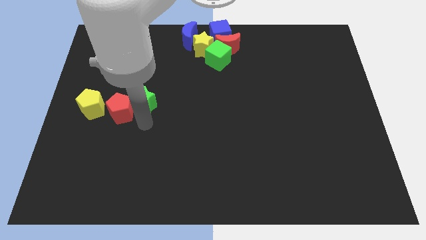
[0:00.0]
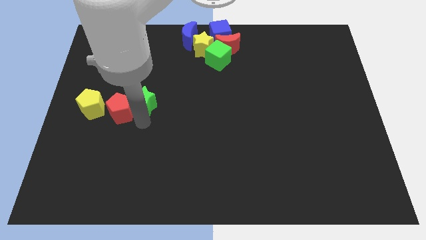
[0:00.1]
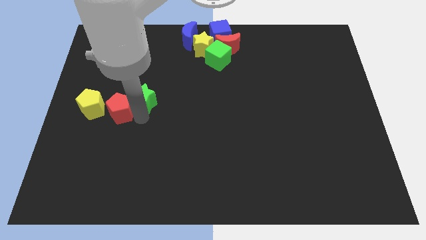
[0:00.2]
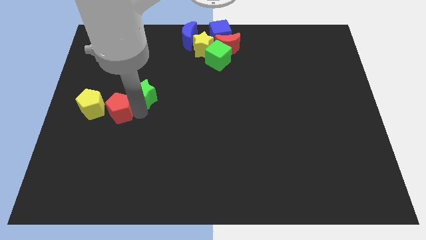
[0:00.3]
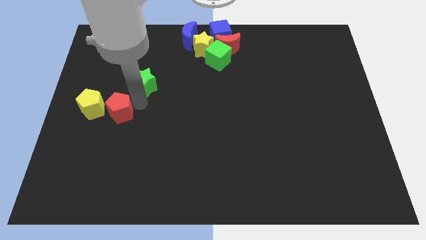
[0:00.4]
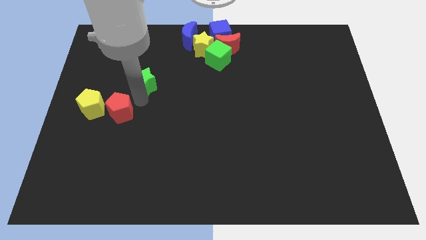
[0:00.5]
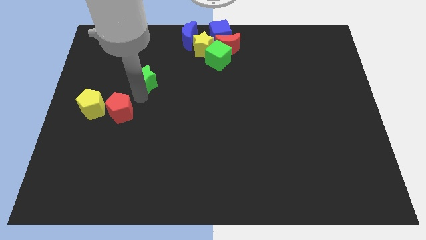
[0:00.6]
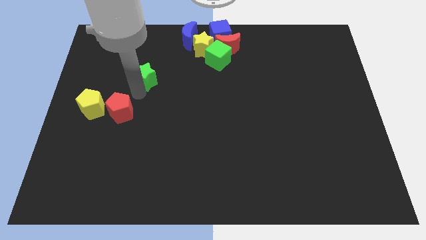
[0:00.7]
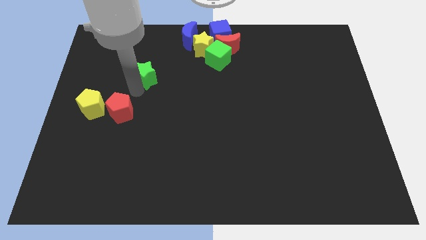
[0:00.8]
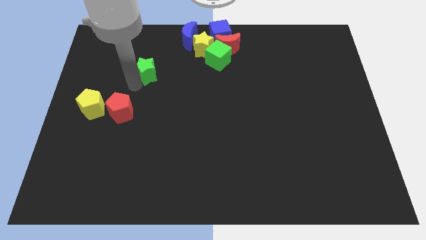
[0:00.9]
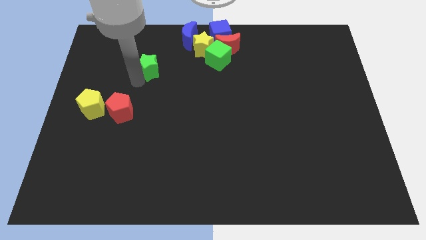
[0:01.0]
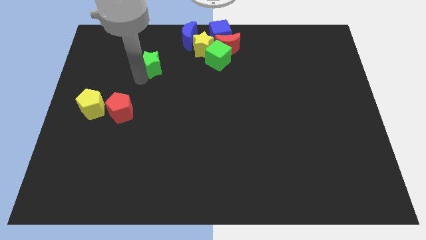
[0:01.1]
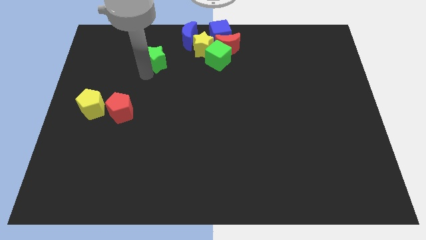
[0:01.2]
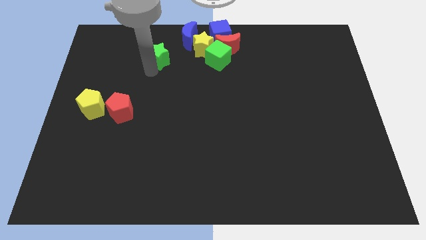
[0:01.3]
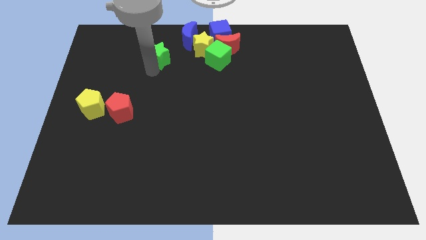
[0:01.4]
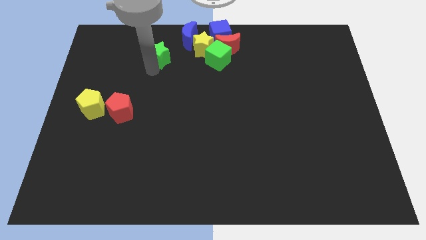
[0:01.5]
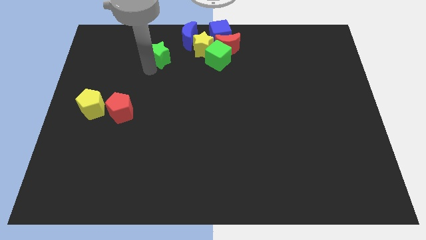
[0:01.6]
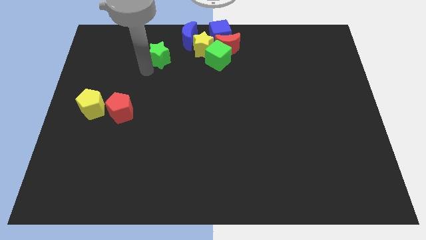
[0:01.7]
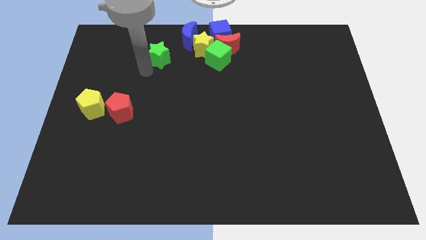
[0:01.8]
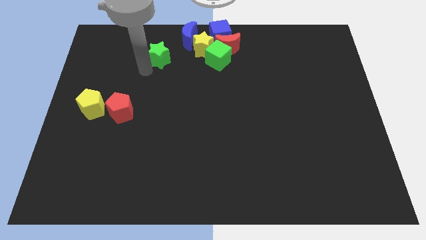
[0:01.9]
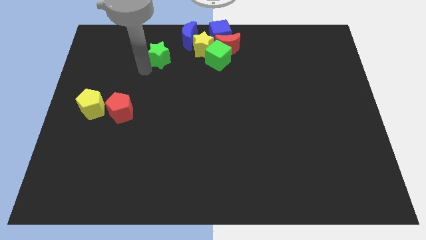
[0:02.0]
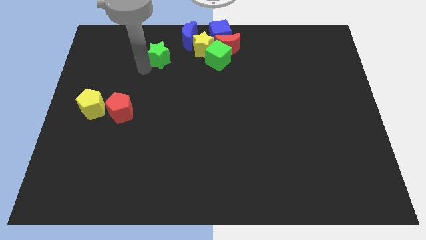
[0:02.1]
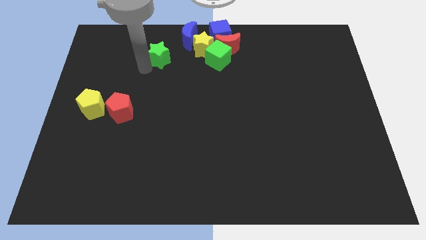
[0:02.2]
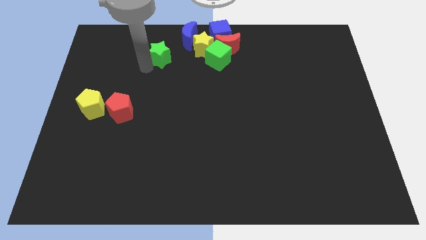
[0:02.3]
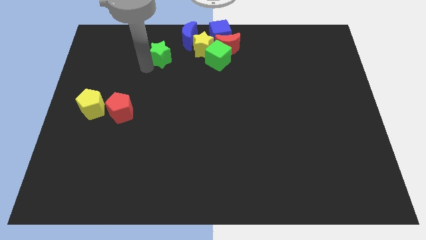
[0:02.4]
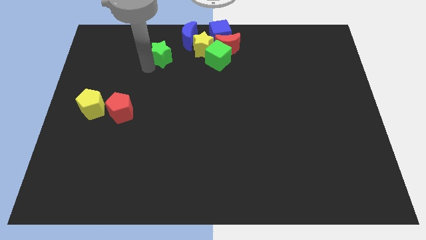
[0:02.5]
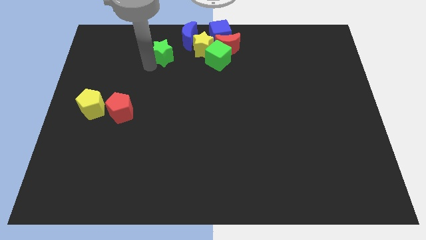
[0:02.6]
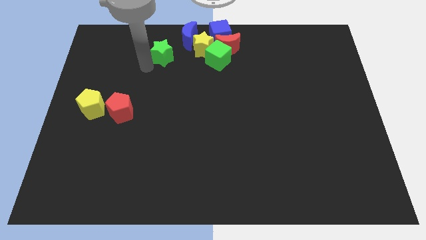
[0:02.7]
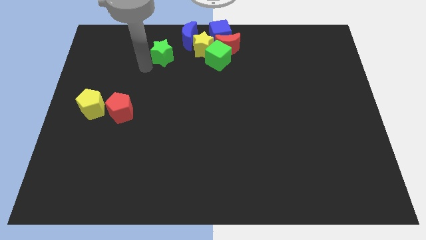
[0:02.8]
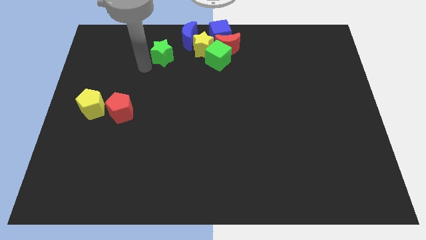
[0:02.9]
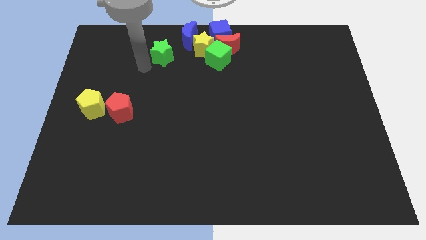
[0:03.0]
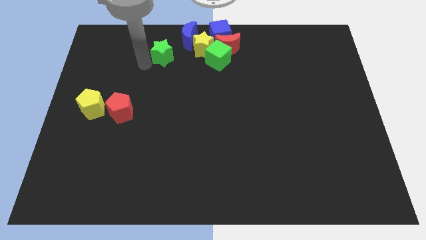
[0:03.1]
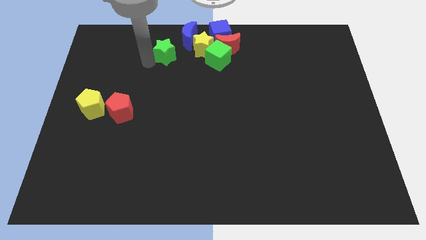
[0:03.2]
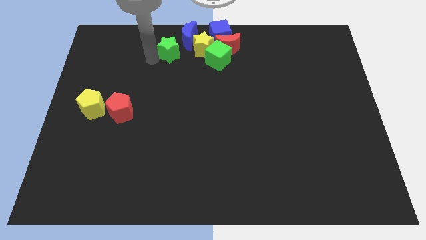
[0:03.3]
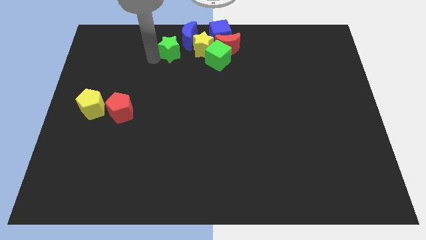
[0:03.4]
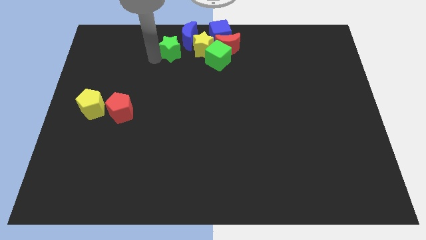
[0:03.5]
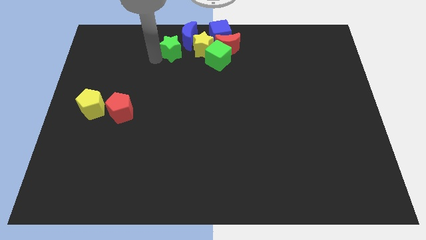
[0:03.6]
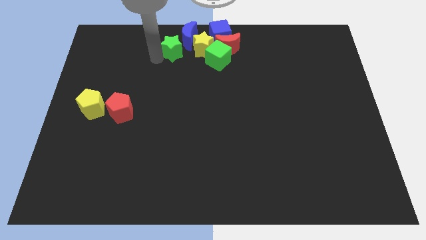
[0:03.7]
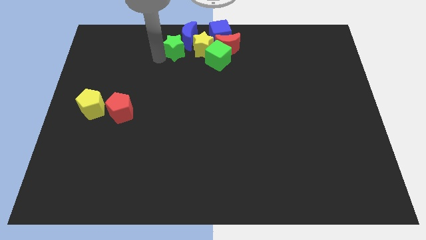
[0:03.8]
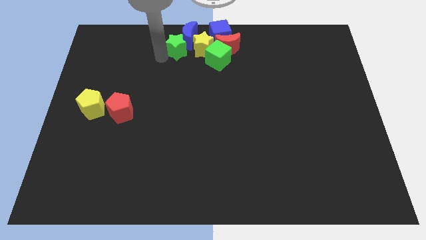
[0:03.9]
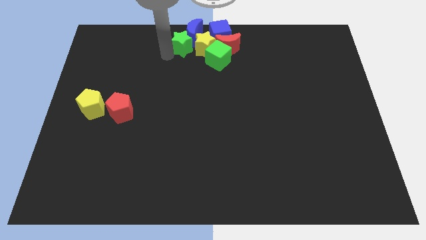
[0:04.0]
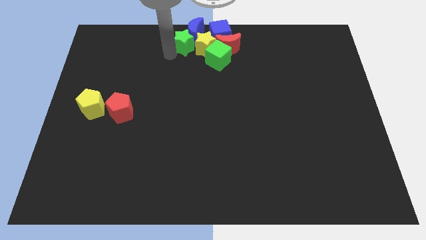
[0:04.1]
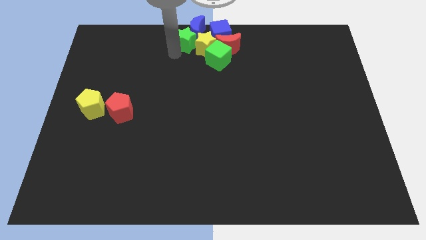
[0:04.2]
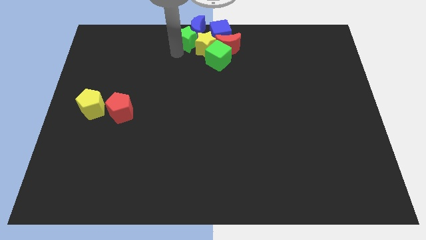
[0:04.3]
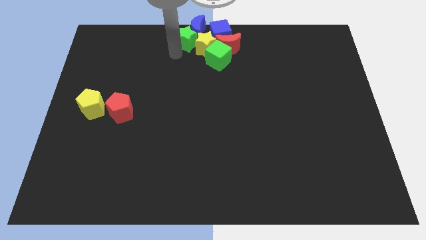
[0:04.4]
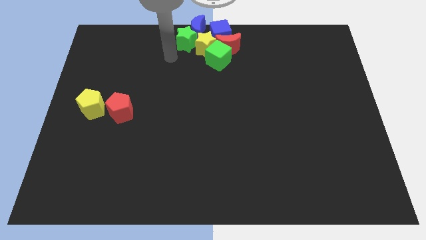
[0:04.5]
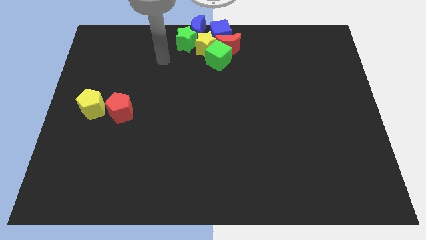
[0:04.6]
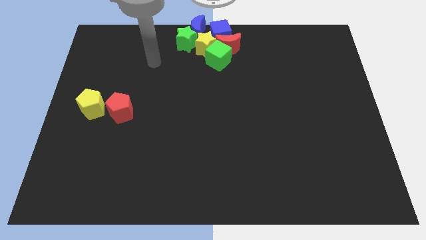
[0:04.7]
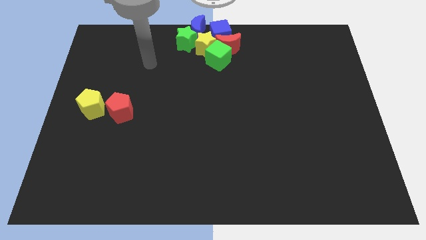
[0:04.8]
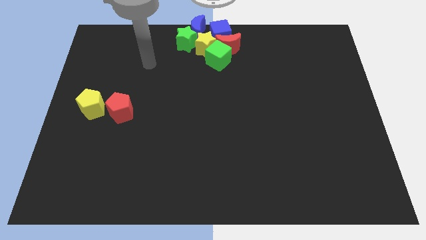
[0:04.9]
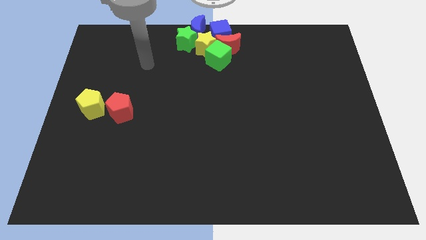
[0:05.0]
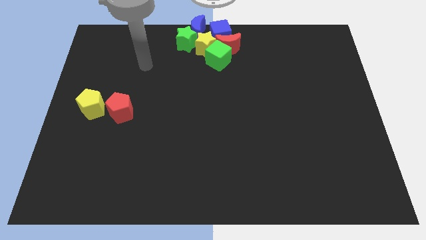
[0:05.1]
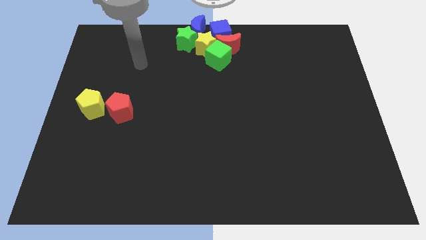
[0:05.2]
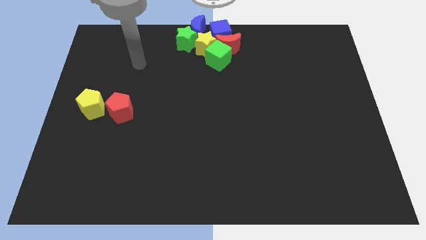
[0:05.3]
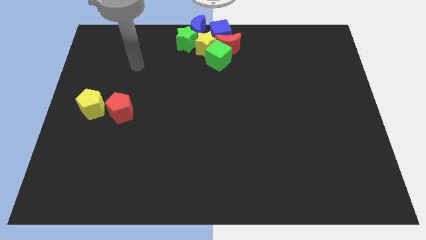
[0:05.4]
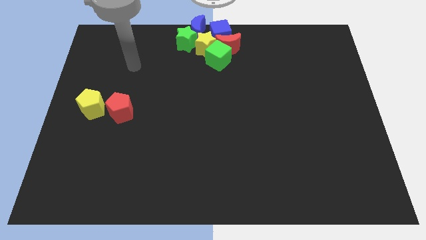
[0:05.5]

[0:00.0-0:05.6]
move green star to the left of yellow star

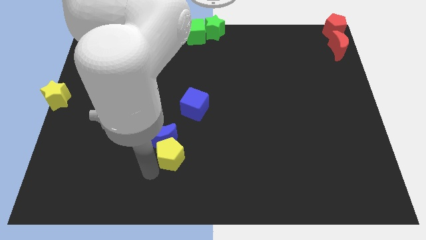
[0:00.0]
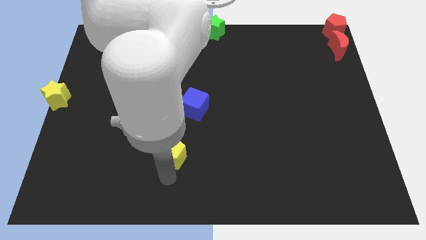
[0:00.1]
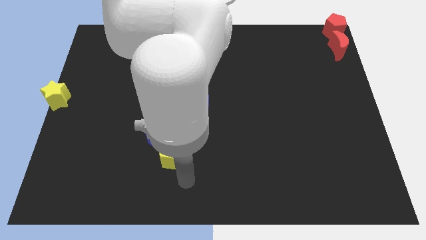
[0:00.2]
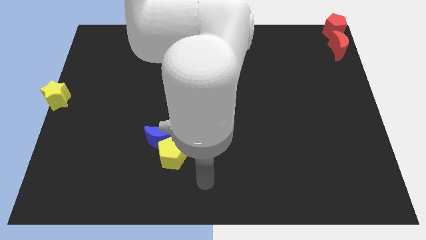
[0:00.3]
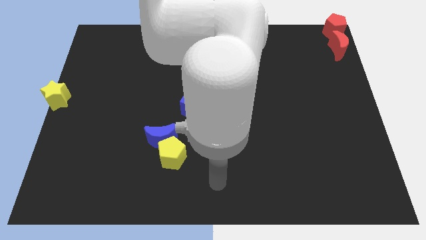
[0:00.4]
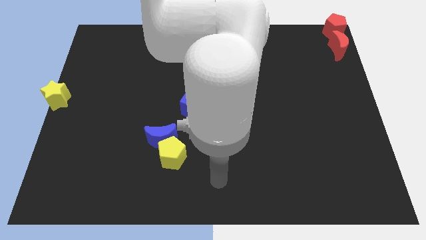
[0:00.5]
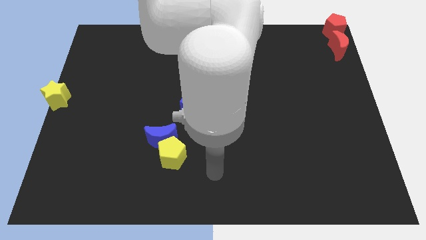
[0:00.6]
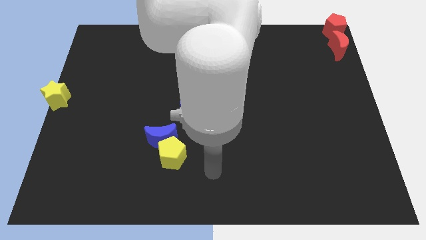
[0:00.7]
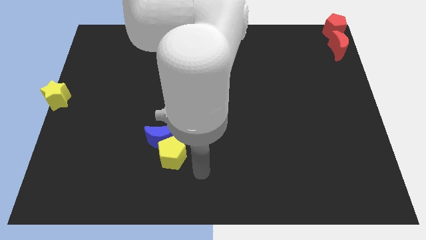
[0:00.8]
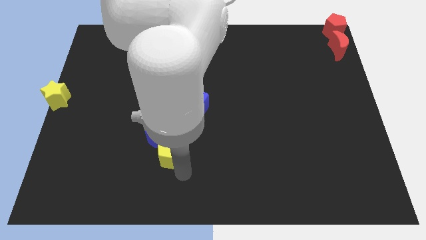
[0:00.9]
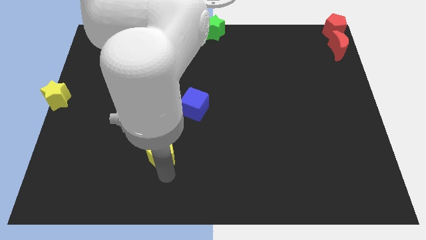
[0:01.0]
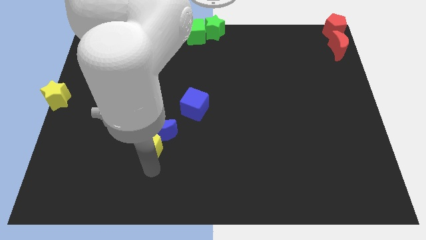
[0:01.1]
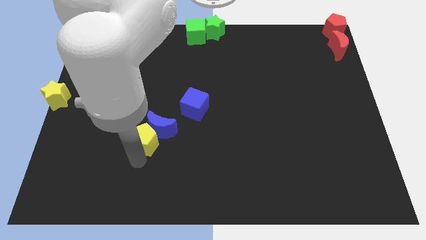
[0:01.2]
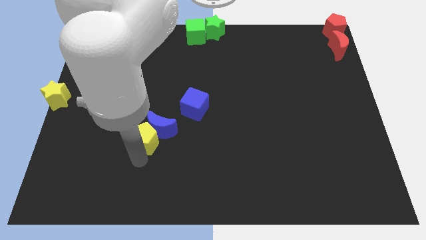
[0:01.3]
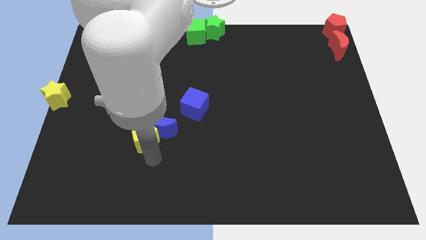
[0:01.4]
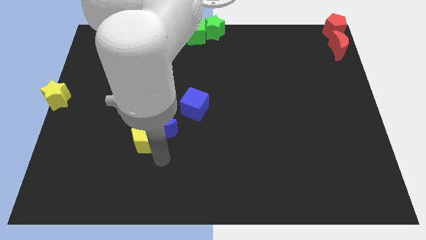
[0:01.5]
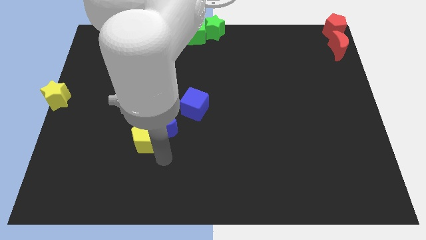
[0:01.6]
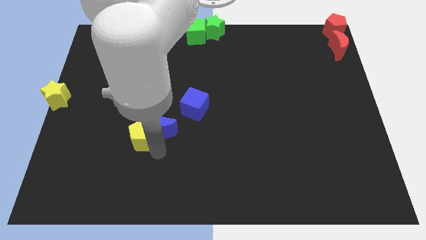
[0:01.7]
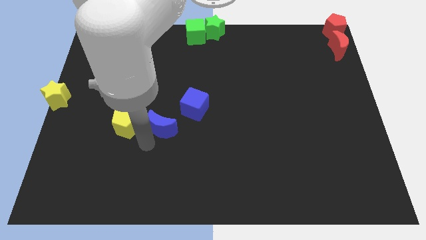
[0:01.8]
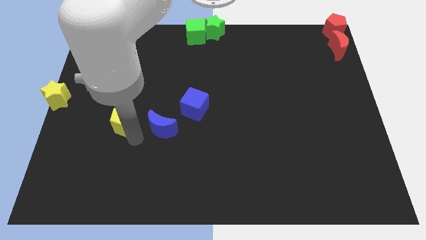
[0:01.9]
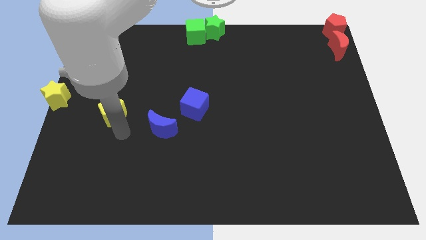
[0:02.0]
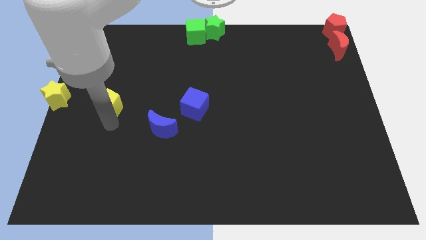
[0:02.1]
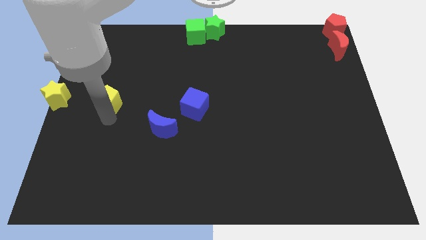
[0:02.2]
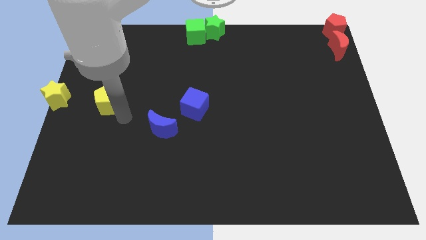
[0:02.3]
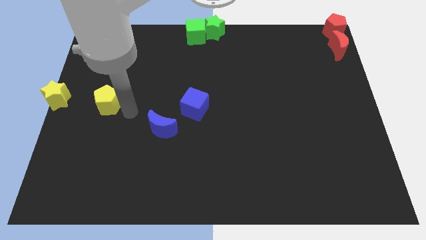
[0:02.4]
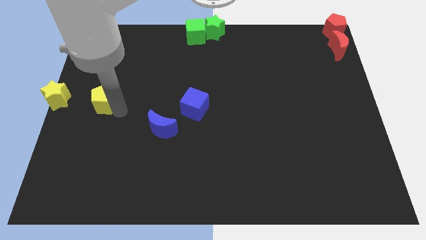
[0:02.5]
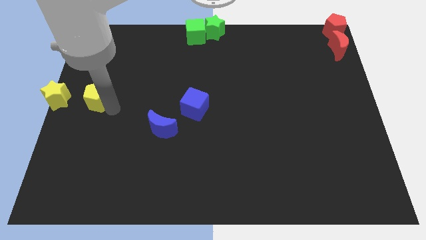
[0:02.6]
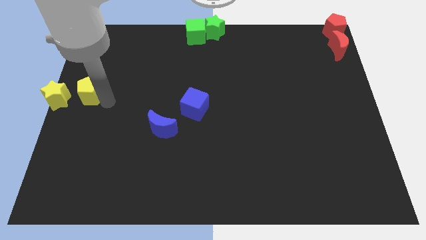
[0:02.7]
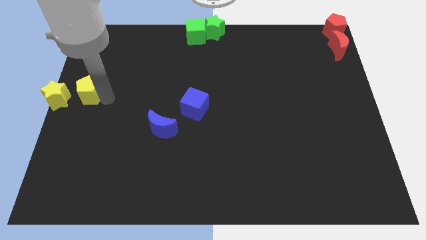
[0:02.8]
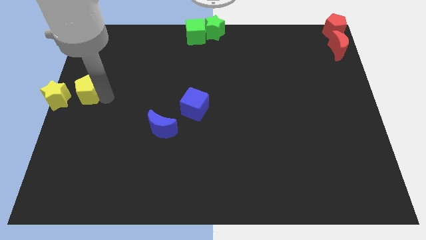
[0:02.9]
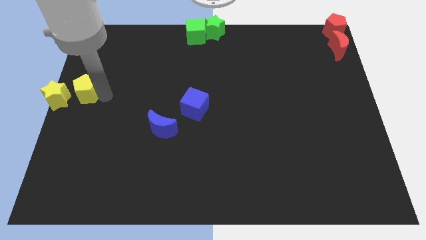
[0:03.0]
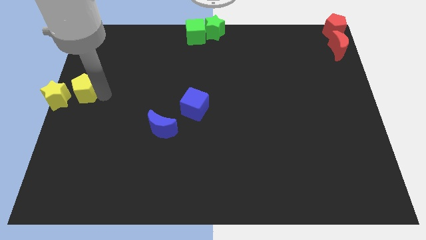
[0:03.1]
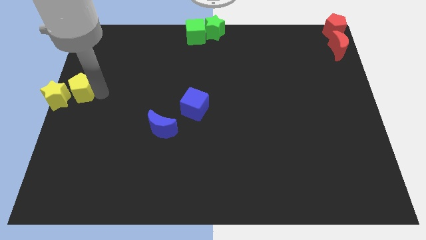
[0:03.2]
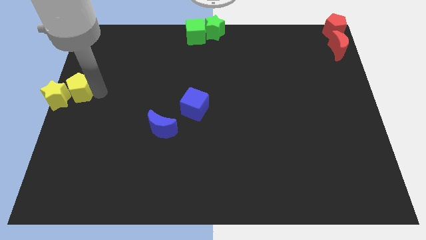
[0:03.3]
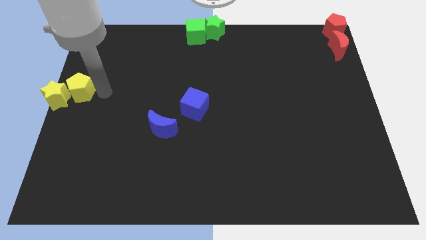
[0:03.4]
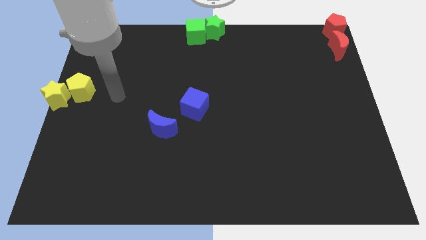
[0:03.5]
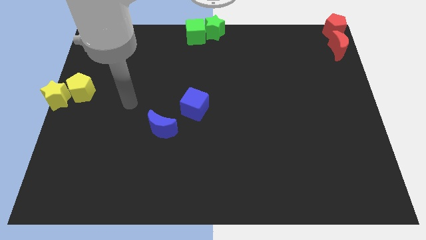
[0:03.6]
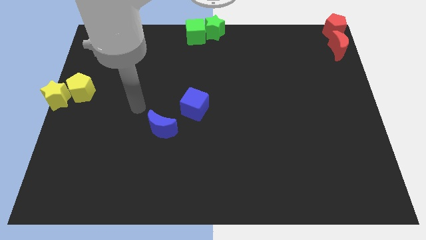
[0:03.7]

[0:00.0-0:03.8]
slide yellow pentagon into the yellow star
